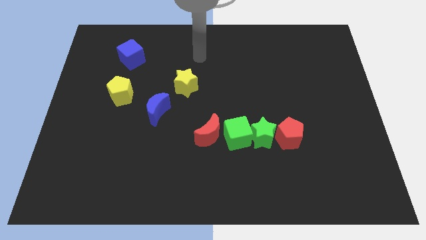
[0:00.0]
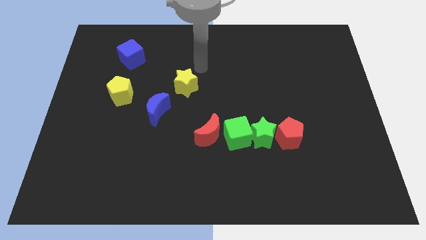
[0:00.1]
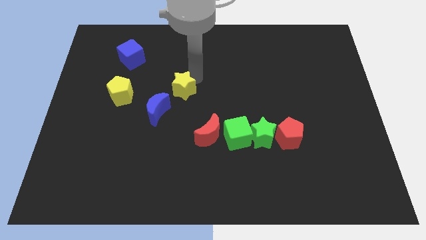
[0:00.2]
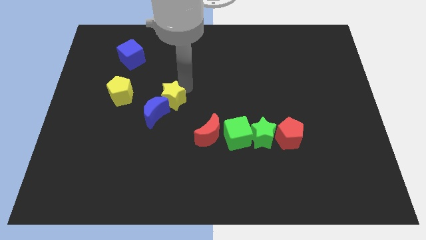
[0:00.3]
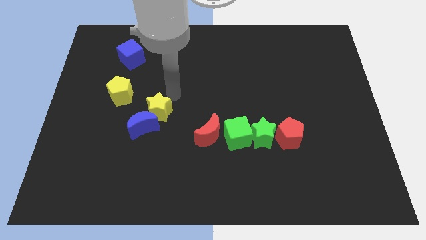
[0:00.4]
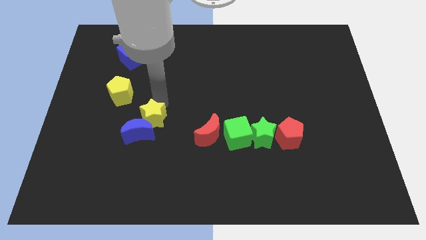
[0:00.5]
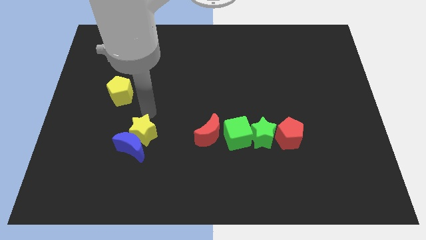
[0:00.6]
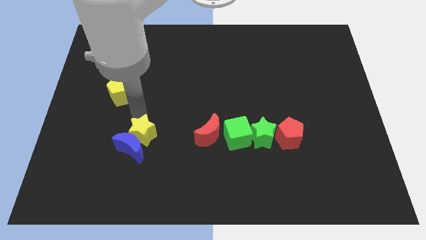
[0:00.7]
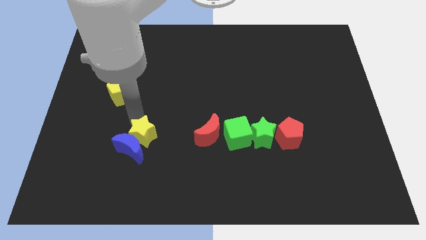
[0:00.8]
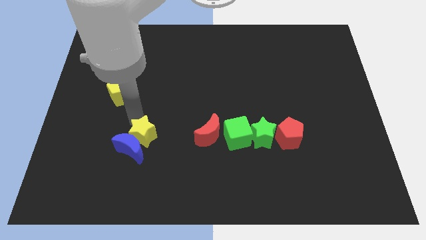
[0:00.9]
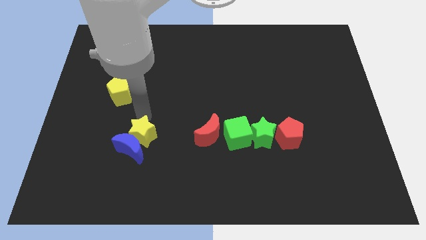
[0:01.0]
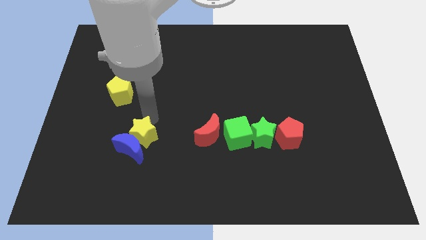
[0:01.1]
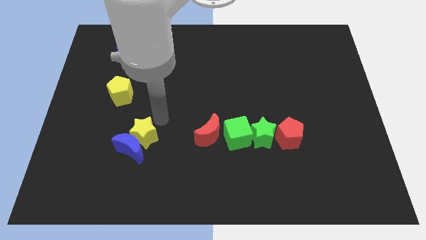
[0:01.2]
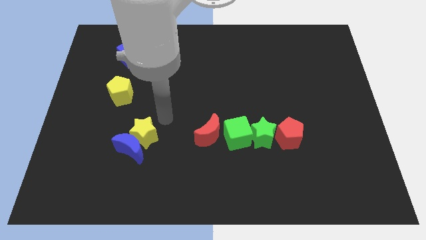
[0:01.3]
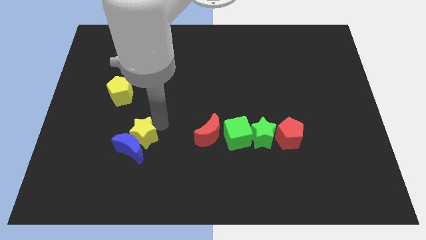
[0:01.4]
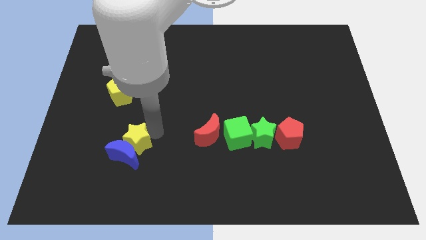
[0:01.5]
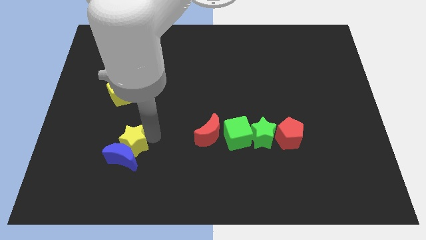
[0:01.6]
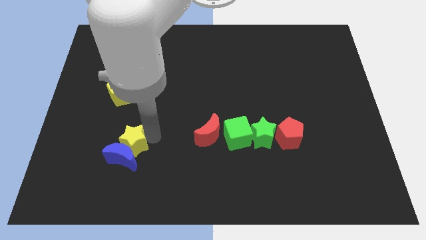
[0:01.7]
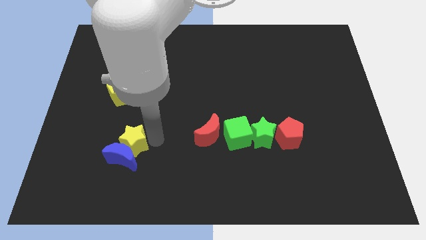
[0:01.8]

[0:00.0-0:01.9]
push the yellow star into the blue moon

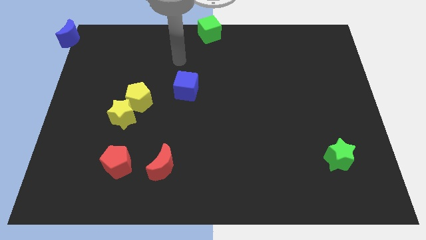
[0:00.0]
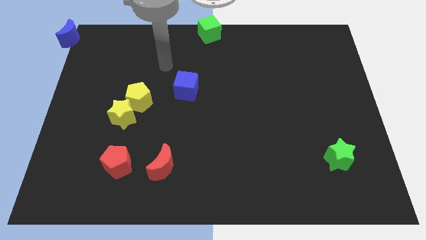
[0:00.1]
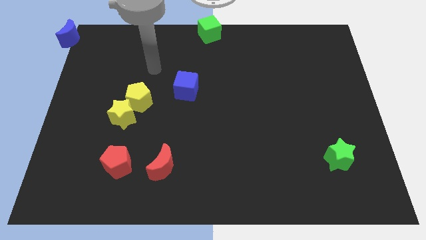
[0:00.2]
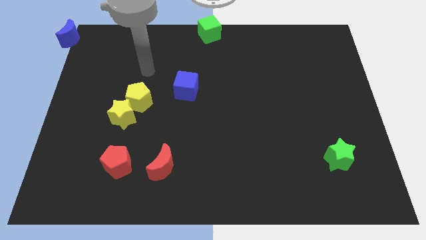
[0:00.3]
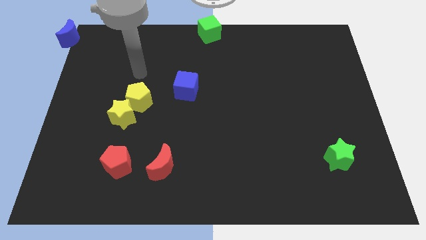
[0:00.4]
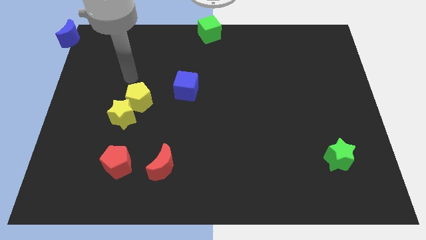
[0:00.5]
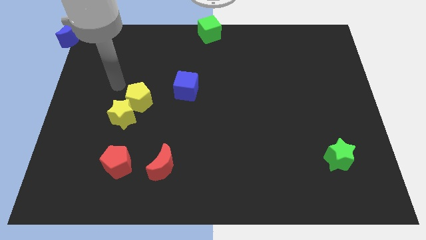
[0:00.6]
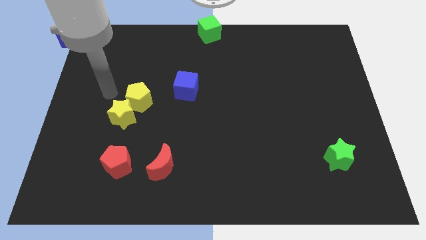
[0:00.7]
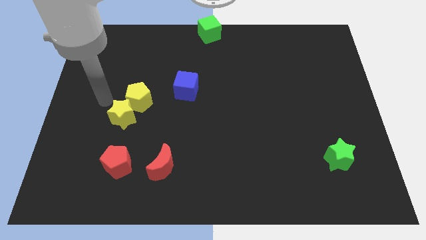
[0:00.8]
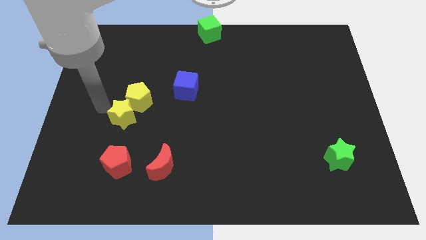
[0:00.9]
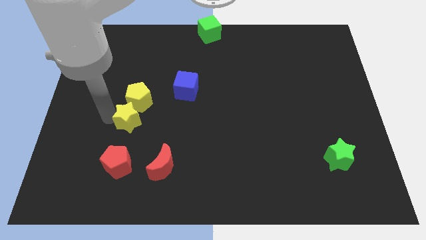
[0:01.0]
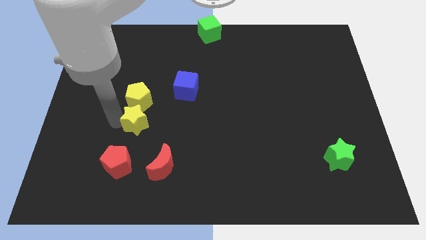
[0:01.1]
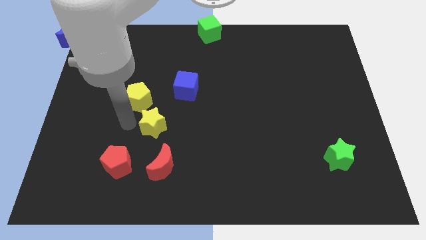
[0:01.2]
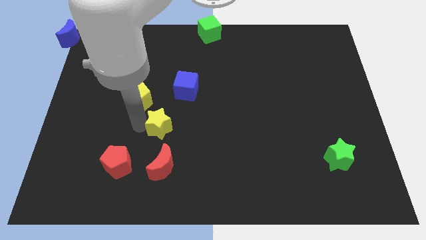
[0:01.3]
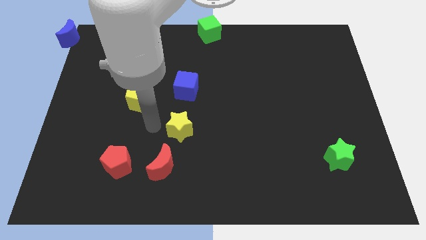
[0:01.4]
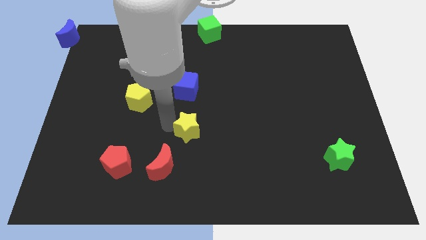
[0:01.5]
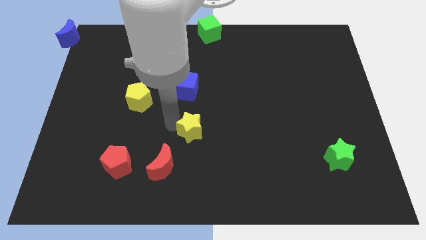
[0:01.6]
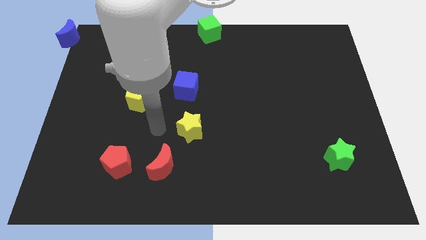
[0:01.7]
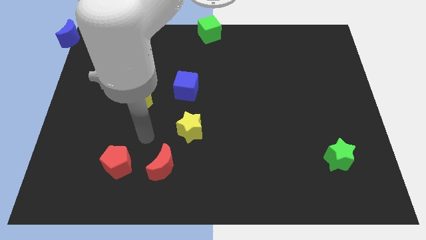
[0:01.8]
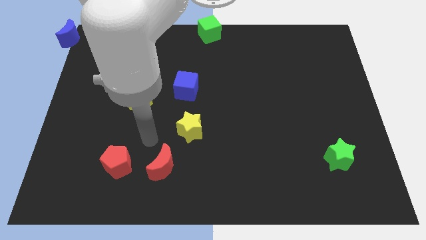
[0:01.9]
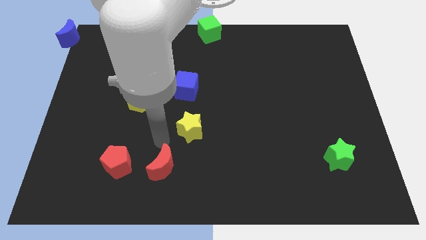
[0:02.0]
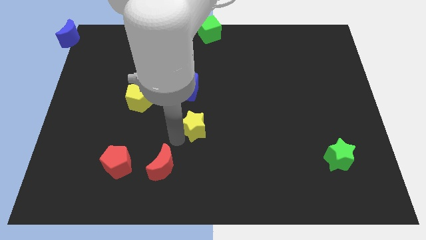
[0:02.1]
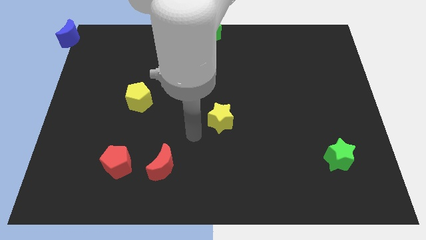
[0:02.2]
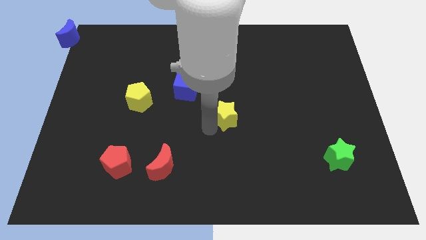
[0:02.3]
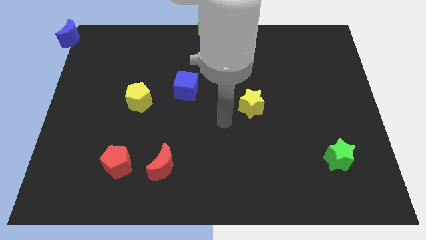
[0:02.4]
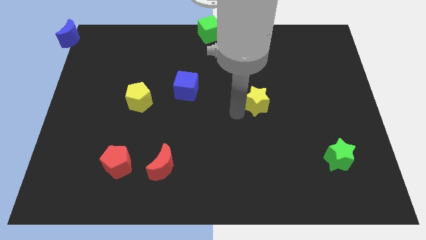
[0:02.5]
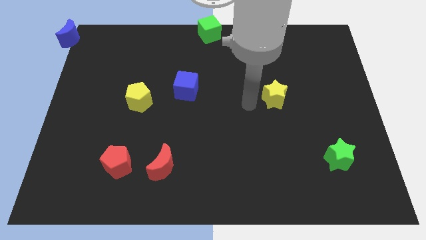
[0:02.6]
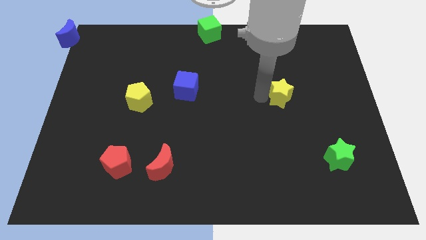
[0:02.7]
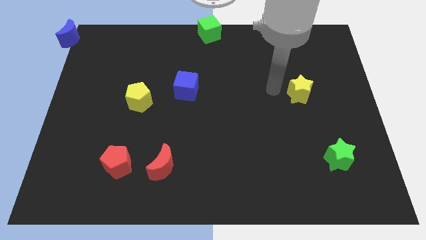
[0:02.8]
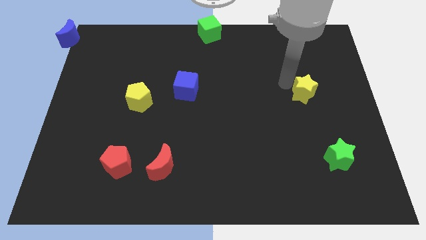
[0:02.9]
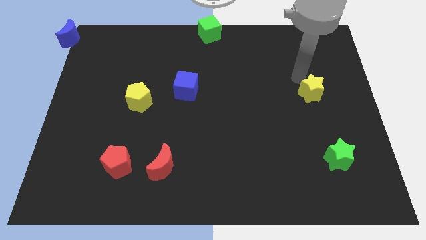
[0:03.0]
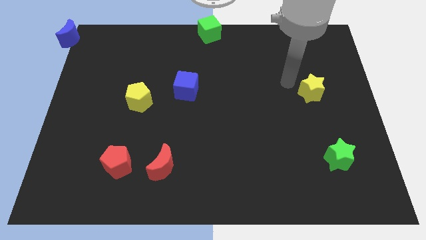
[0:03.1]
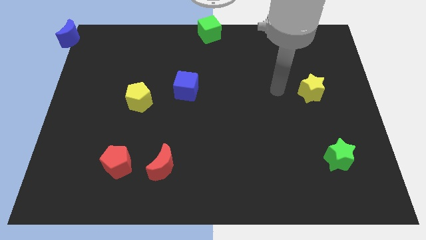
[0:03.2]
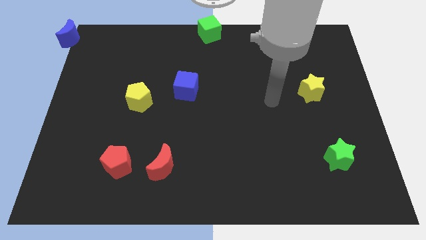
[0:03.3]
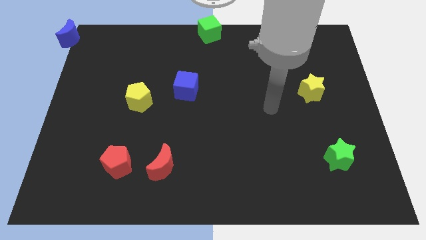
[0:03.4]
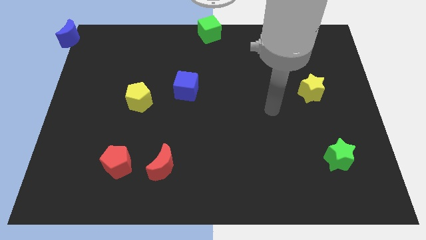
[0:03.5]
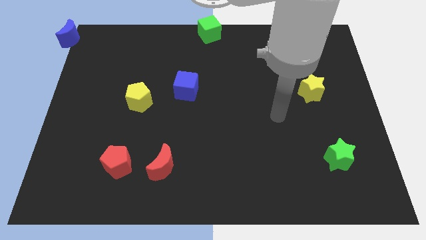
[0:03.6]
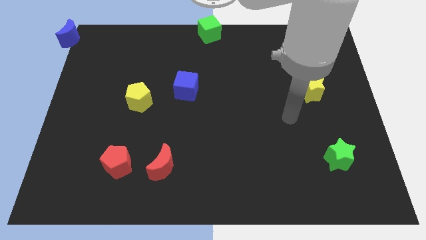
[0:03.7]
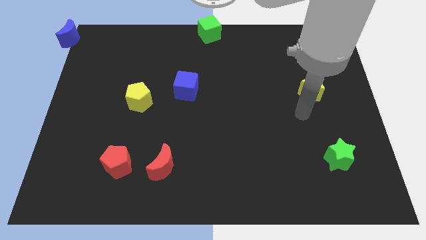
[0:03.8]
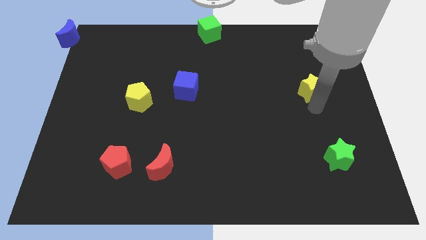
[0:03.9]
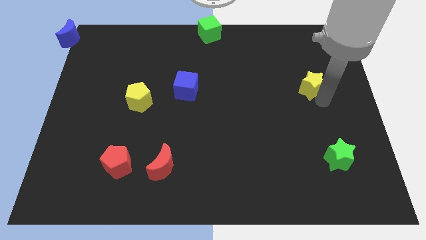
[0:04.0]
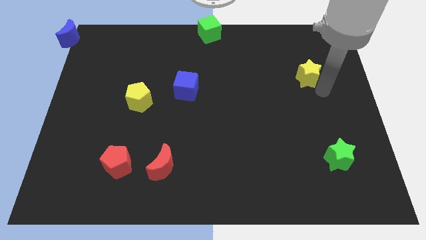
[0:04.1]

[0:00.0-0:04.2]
place yellow star to the top of green star

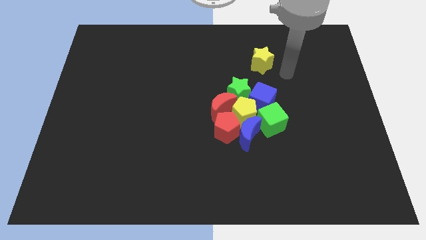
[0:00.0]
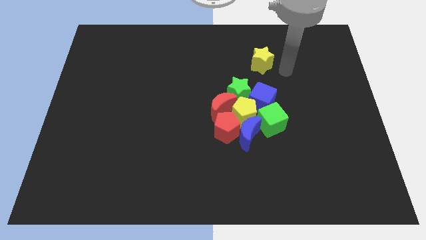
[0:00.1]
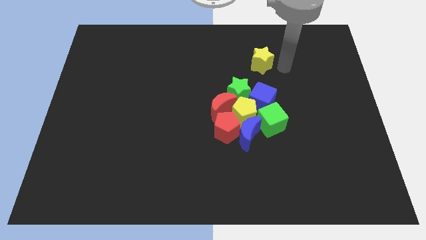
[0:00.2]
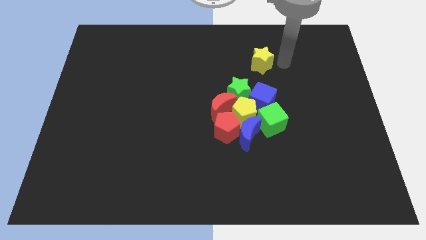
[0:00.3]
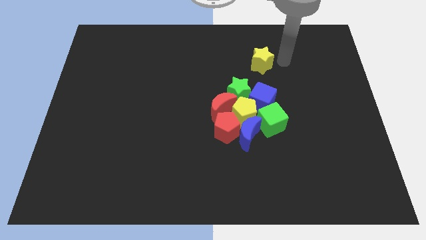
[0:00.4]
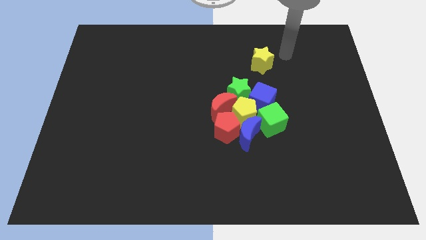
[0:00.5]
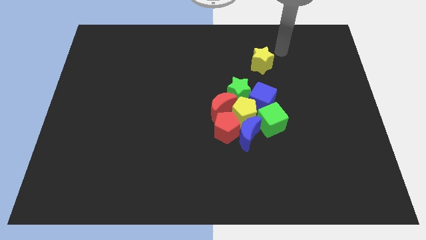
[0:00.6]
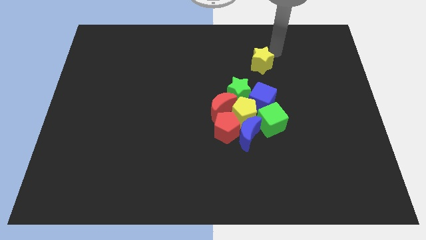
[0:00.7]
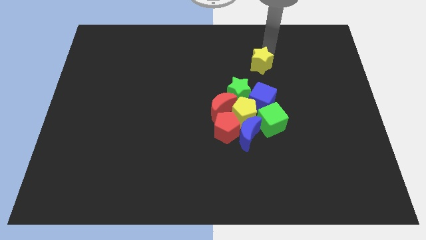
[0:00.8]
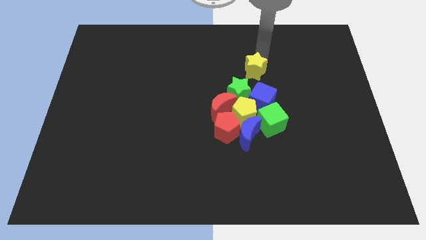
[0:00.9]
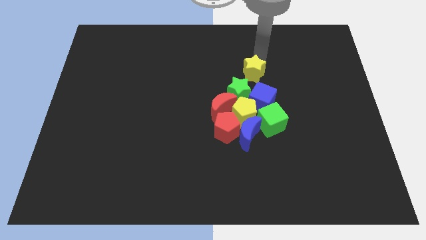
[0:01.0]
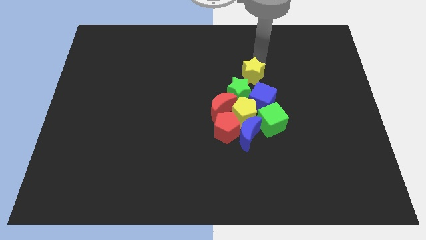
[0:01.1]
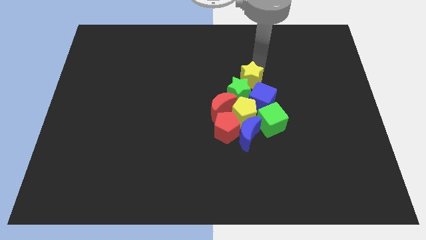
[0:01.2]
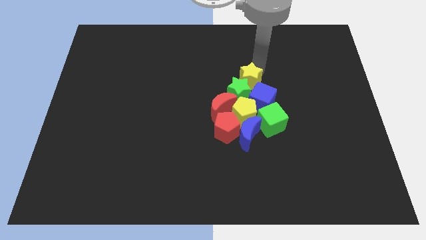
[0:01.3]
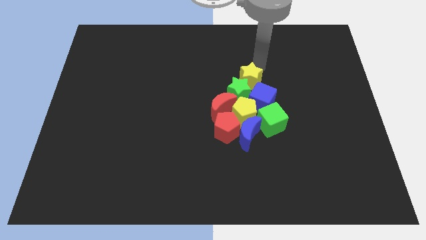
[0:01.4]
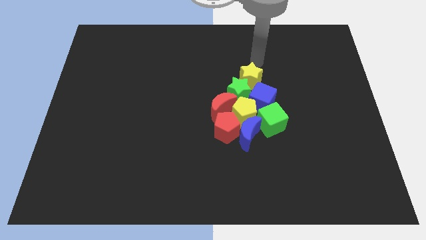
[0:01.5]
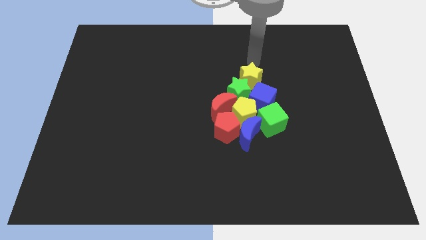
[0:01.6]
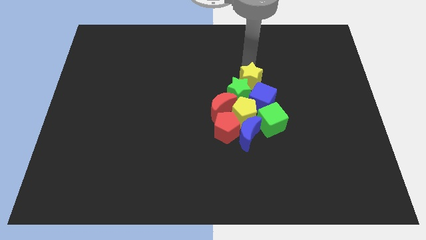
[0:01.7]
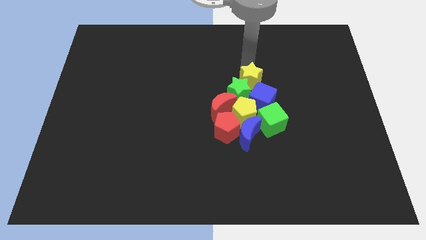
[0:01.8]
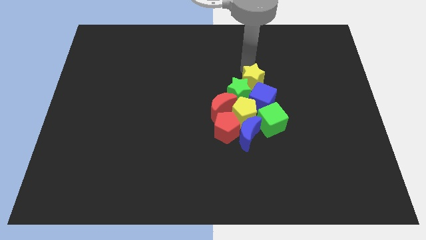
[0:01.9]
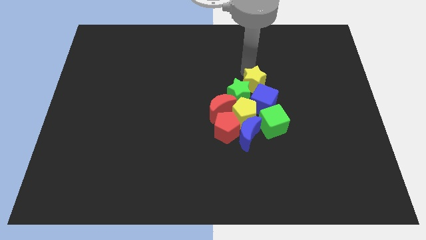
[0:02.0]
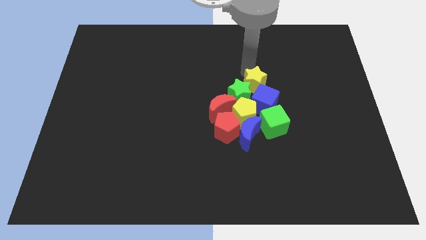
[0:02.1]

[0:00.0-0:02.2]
slide the yellow star into the top of the green star

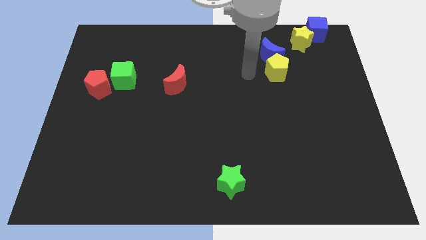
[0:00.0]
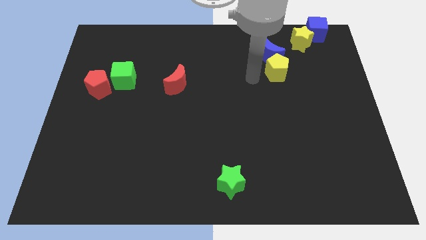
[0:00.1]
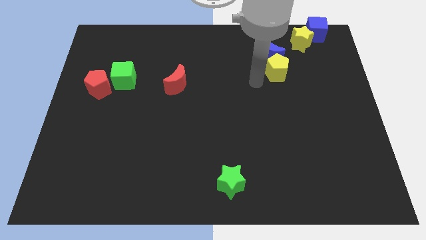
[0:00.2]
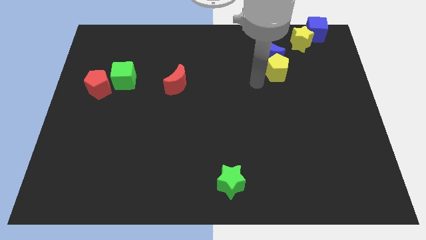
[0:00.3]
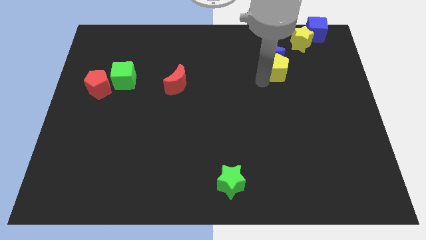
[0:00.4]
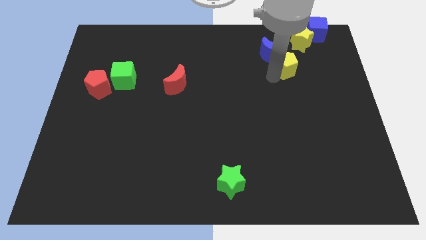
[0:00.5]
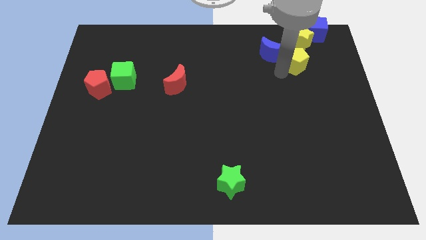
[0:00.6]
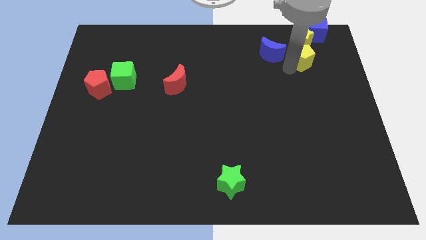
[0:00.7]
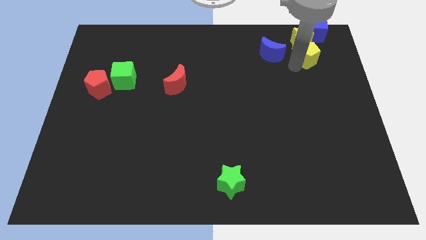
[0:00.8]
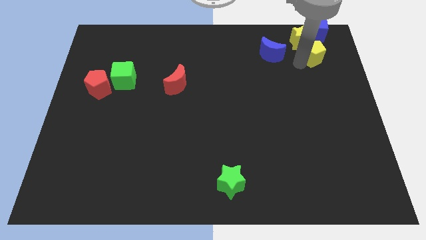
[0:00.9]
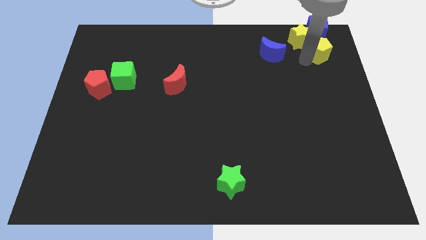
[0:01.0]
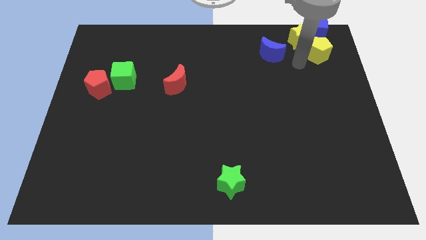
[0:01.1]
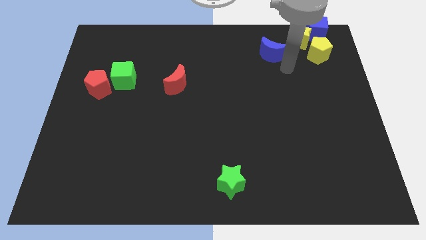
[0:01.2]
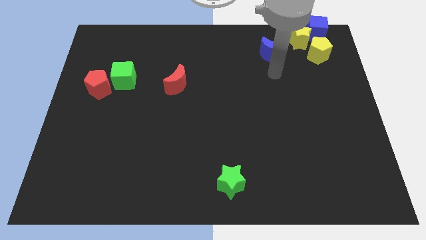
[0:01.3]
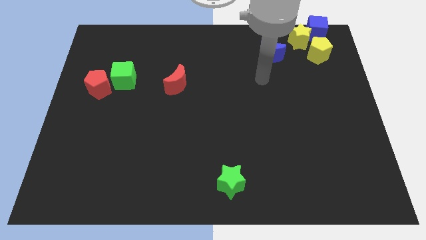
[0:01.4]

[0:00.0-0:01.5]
push the yellow pentagon towards the yellow star
